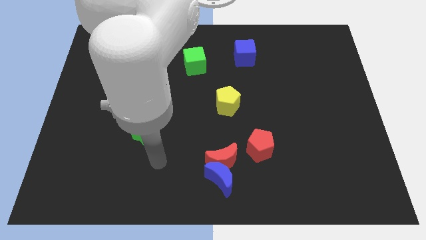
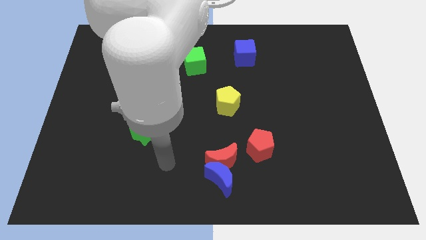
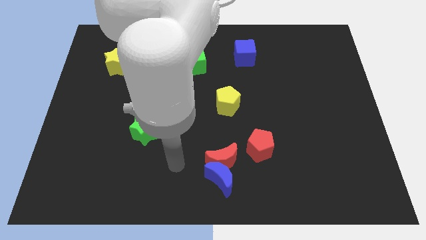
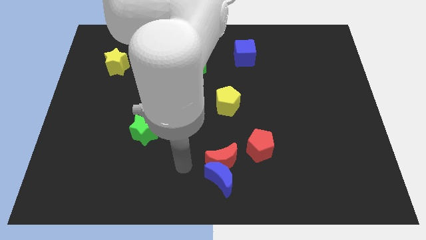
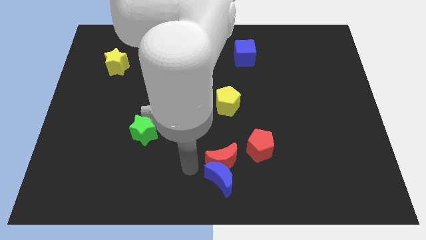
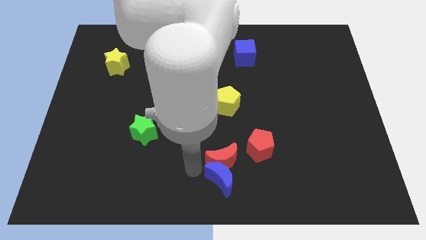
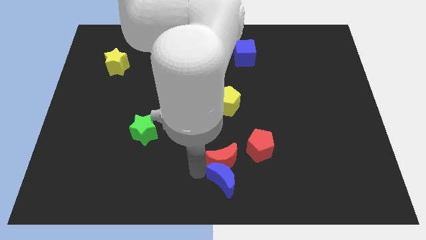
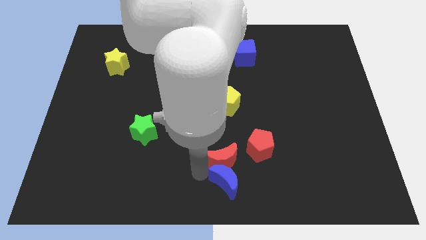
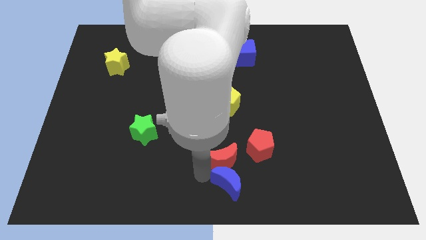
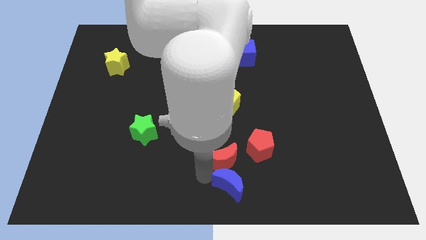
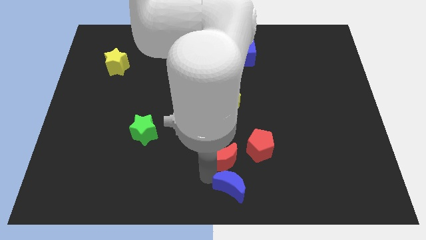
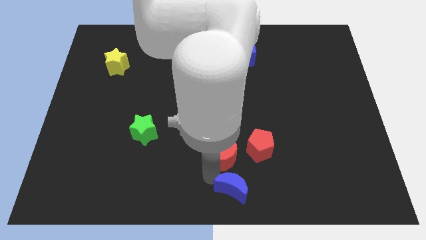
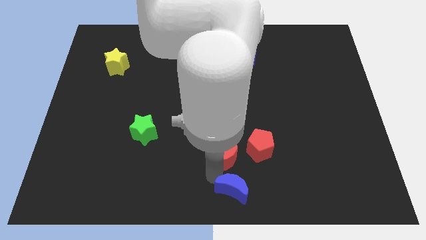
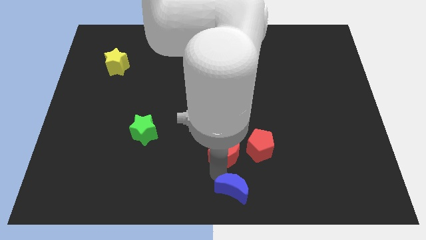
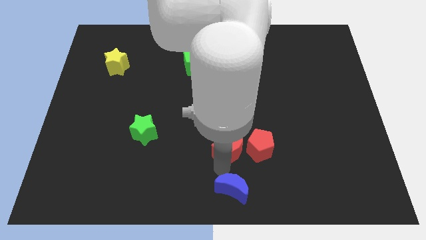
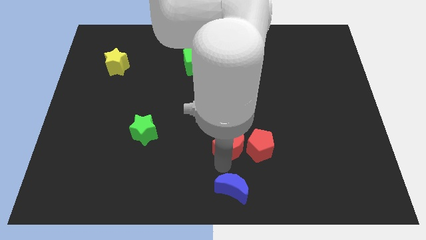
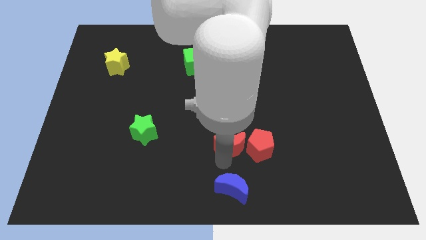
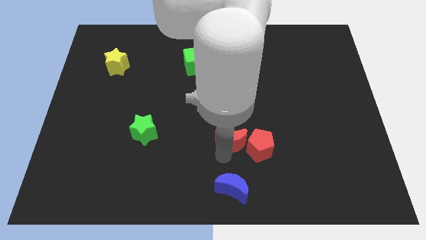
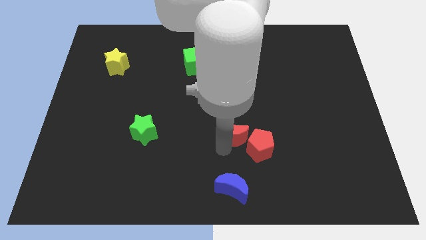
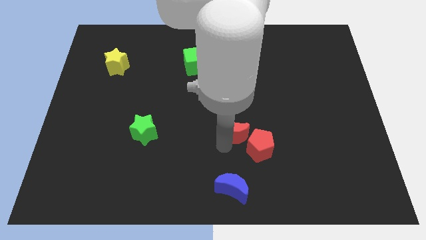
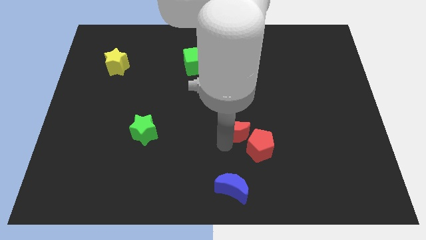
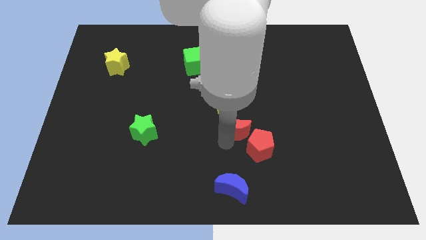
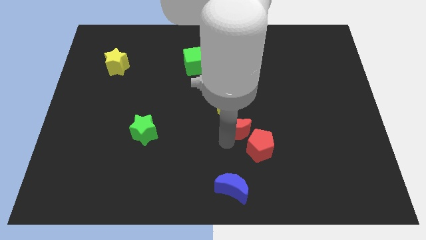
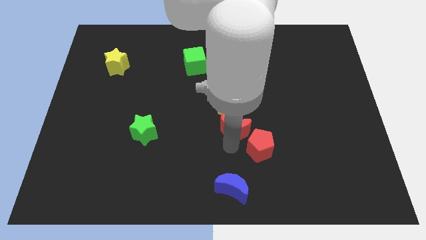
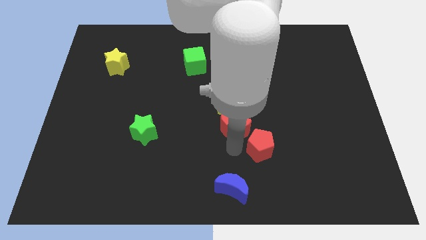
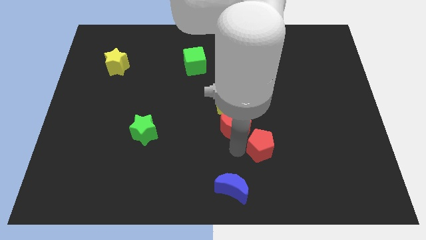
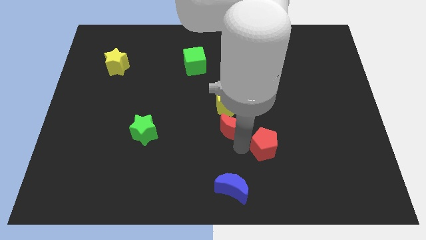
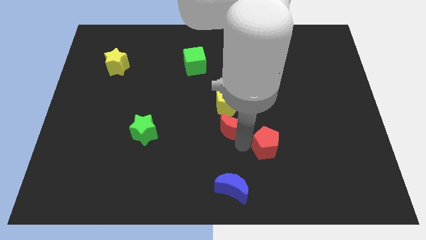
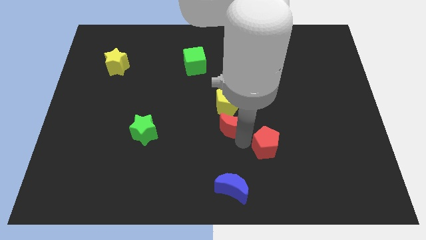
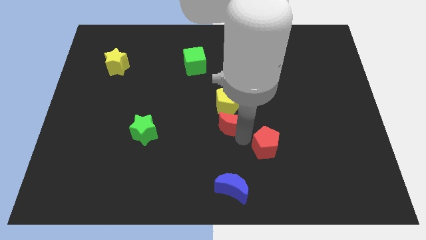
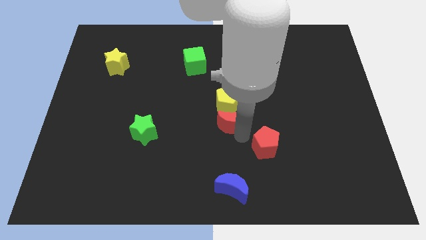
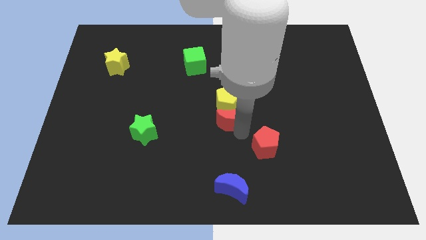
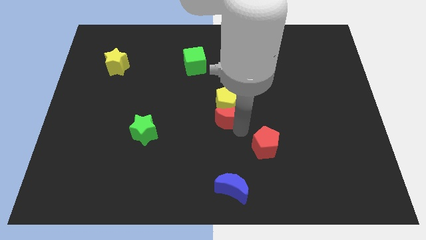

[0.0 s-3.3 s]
move the red moon close to the yellow pentagon

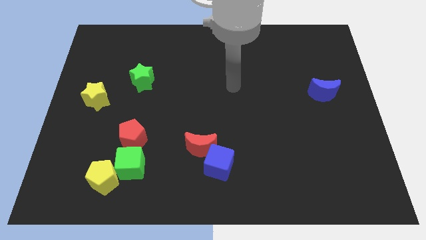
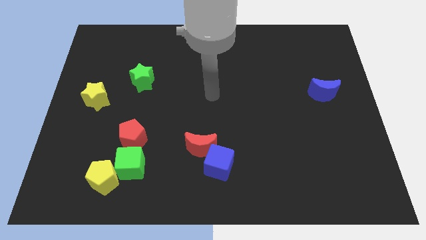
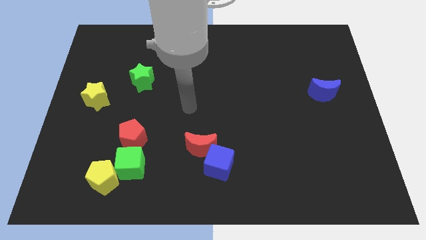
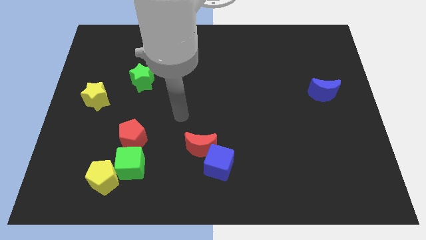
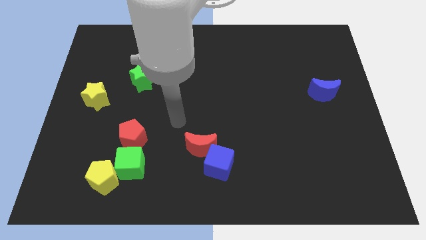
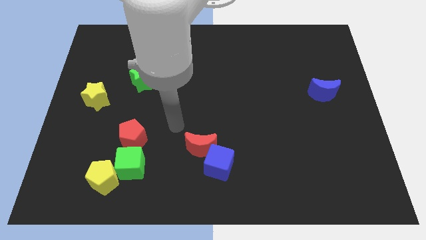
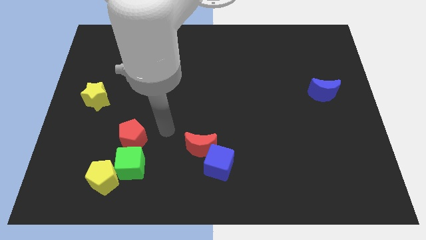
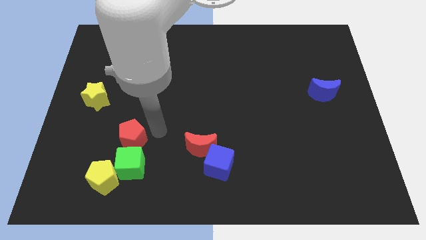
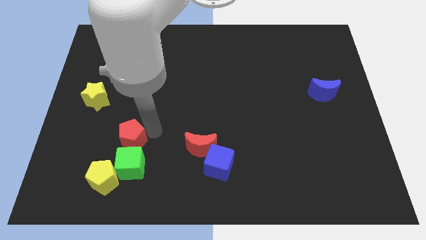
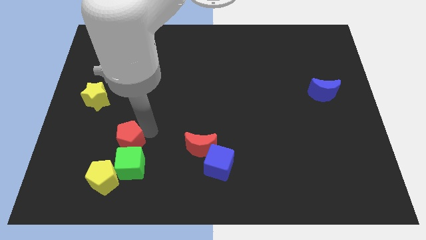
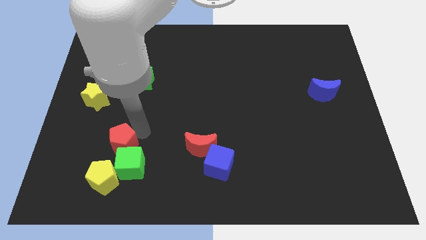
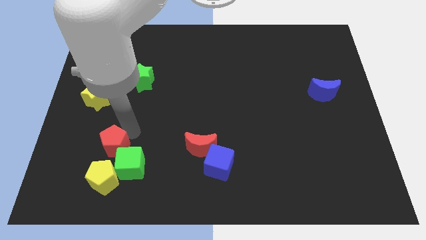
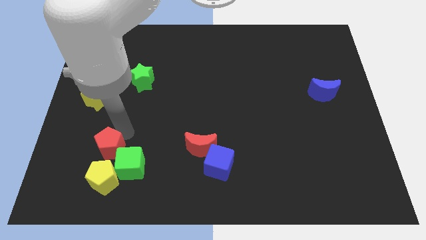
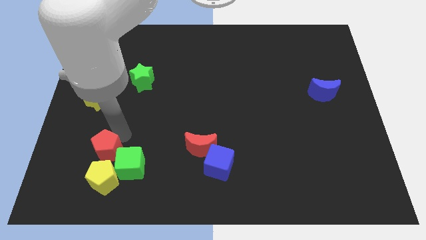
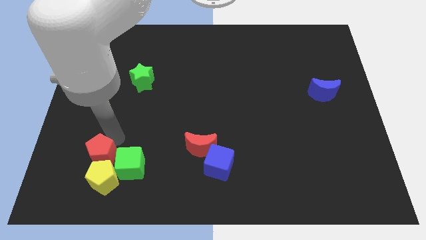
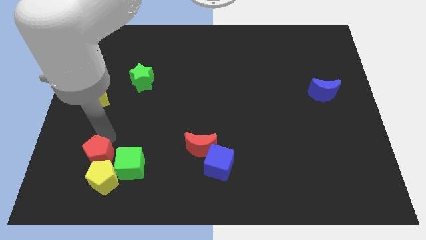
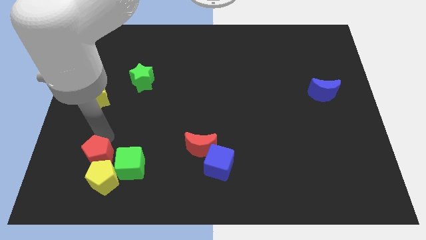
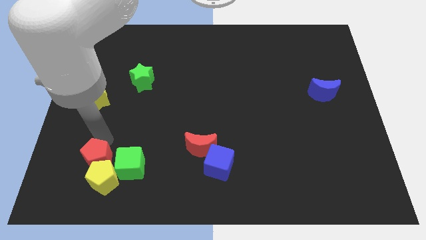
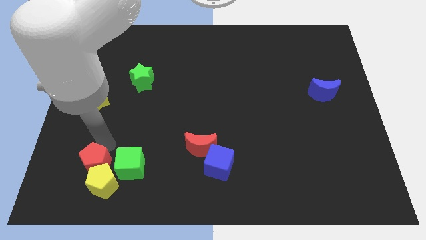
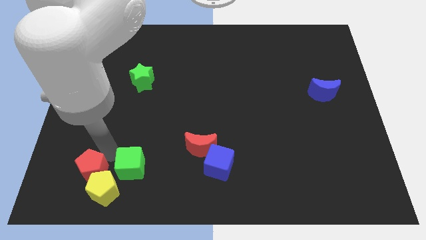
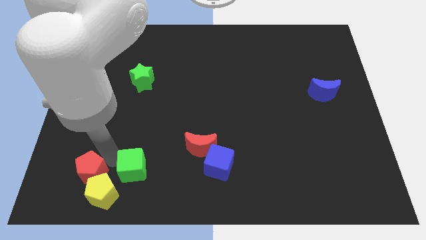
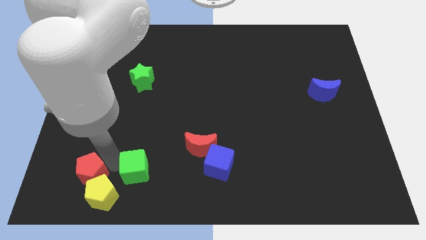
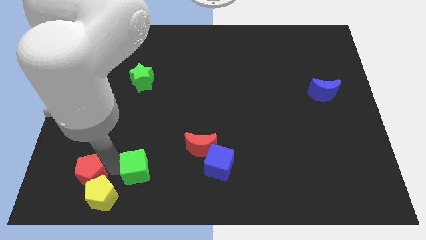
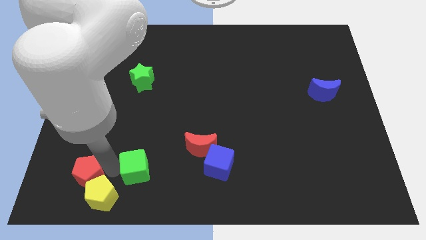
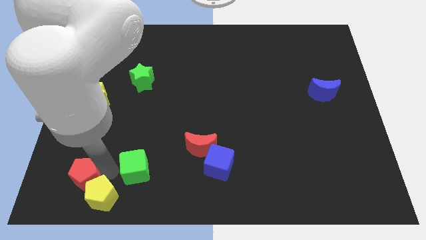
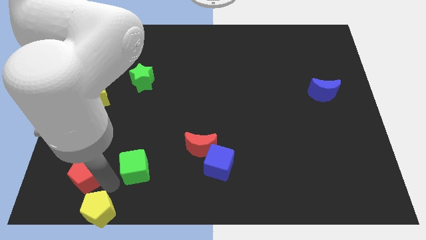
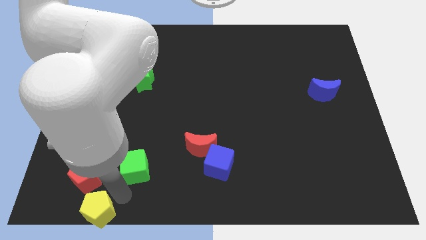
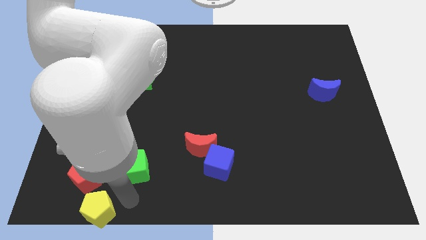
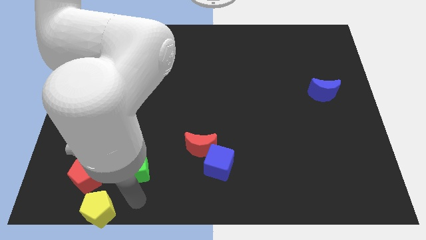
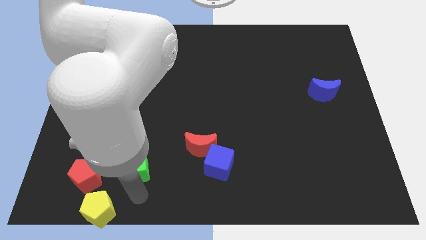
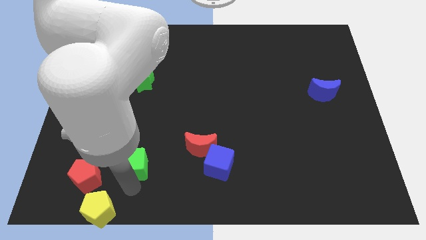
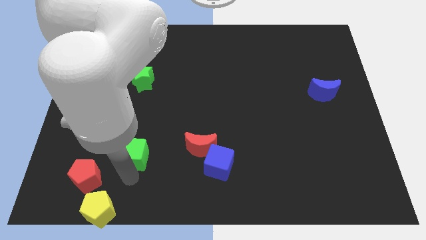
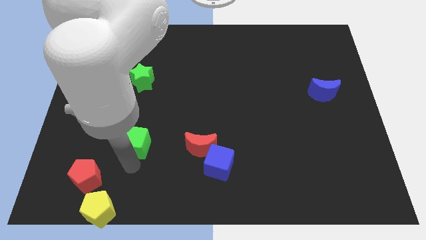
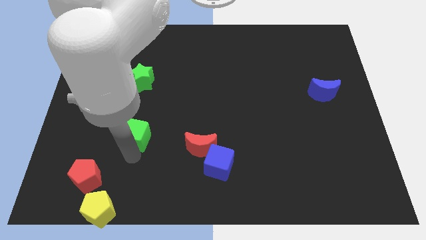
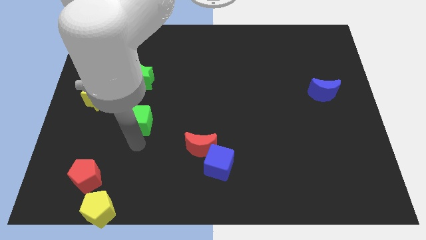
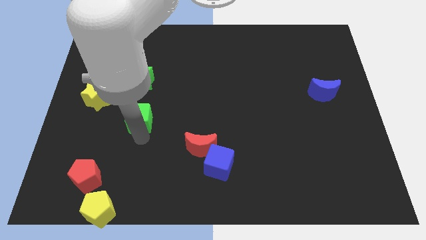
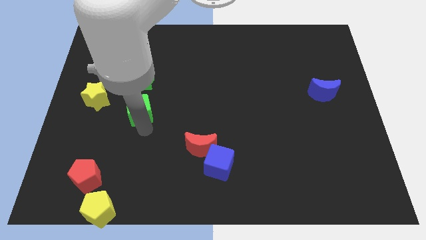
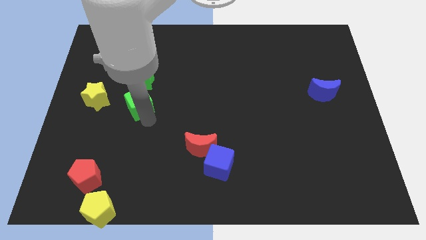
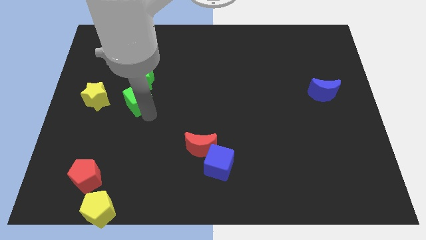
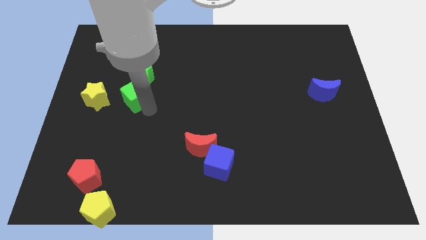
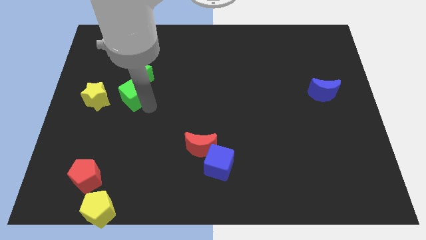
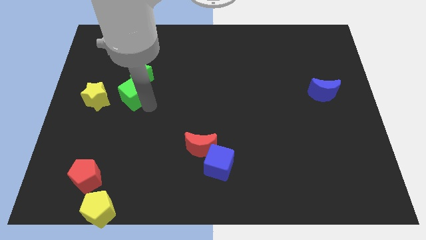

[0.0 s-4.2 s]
push the green cube to the green star

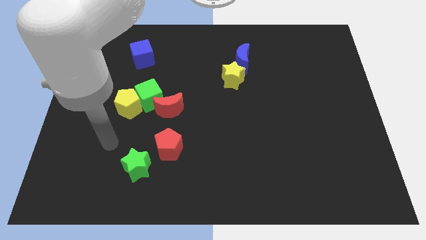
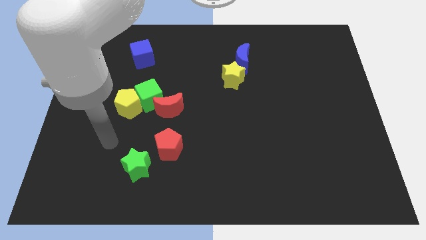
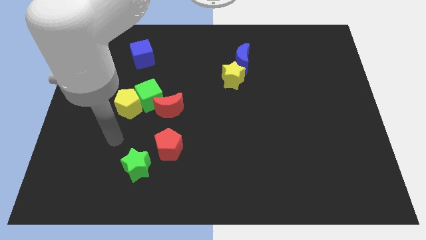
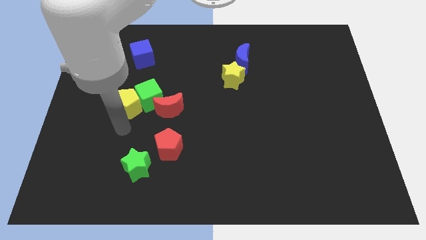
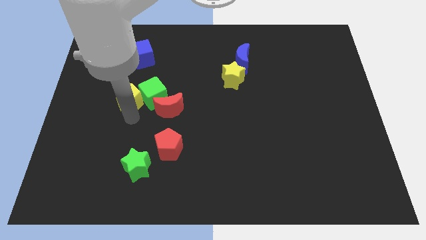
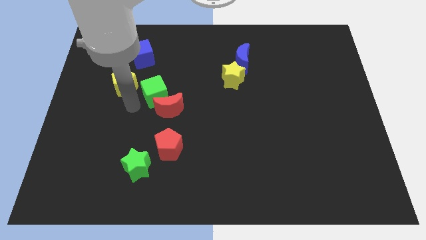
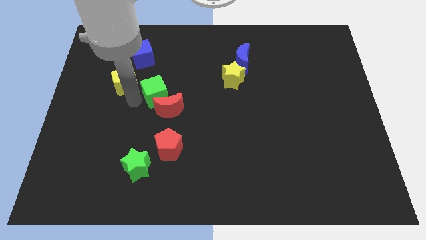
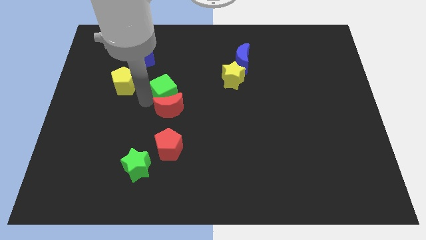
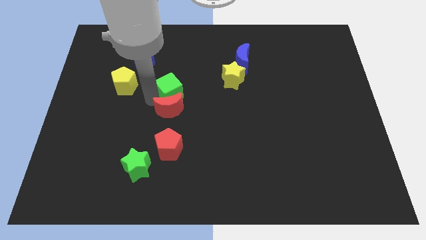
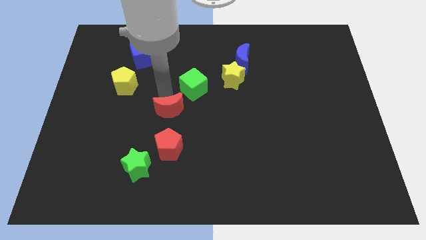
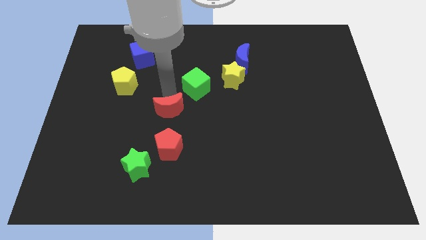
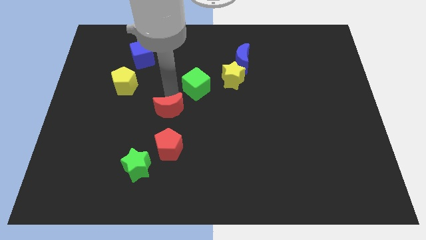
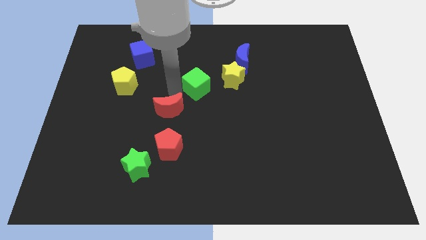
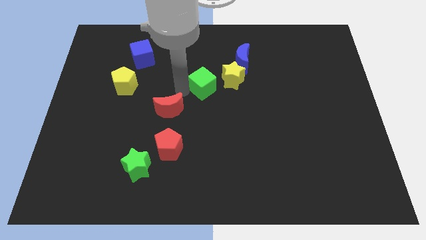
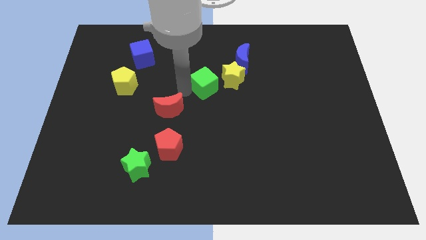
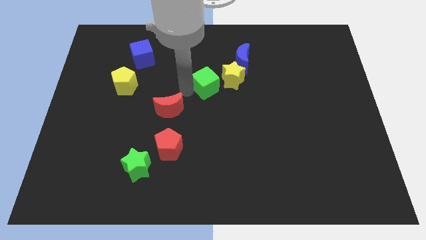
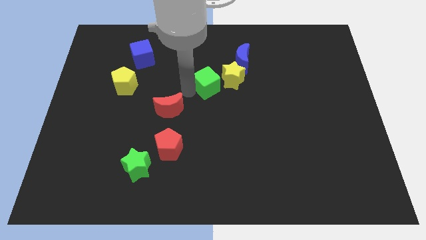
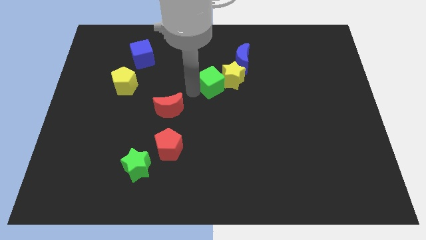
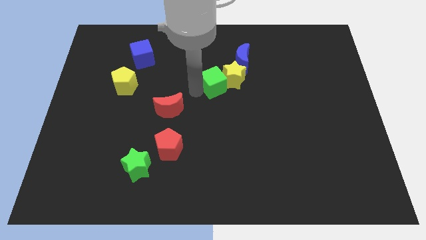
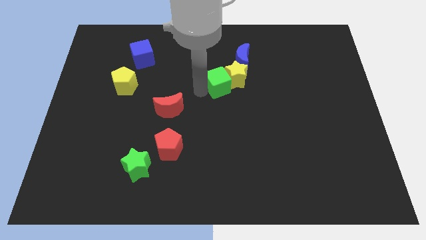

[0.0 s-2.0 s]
put the green cube to the yellow star
